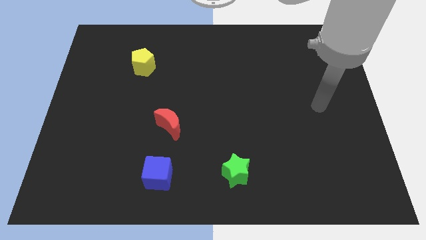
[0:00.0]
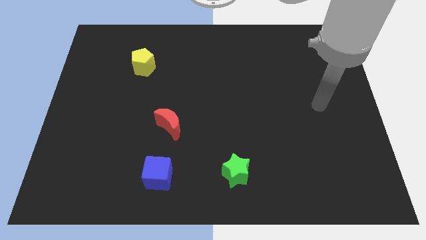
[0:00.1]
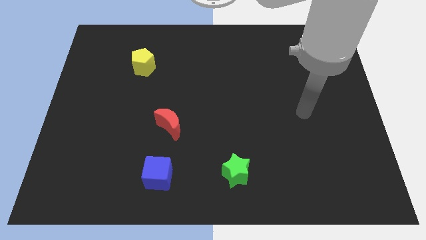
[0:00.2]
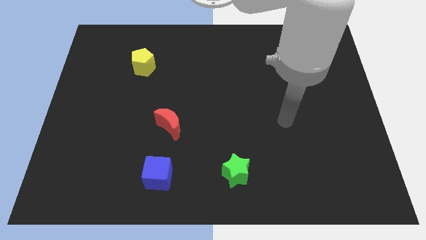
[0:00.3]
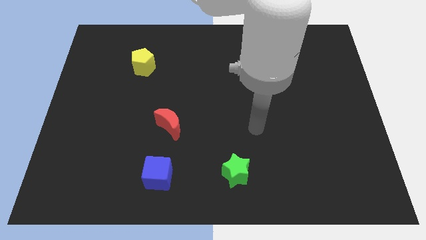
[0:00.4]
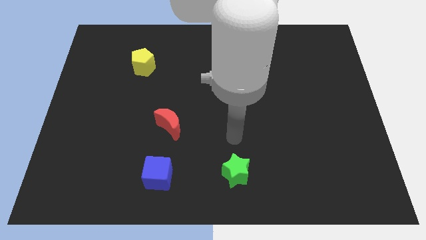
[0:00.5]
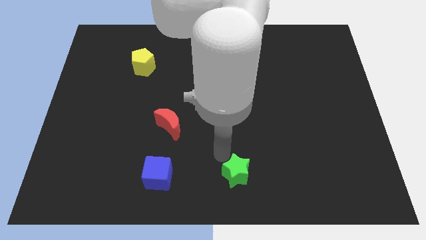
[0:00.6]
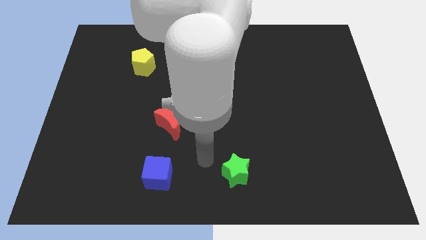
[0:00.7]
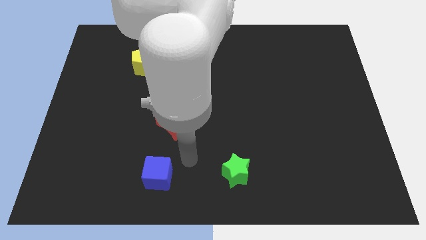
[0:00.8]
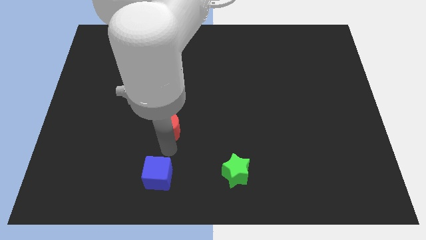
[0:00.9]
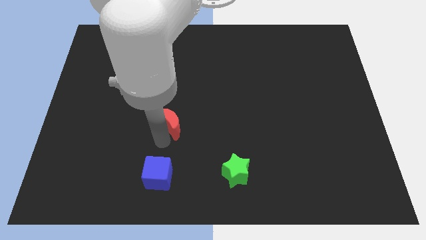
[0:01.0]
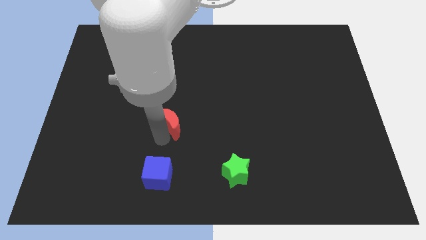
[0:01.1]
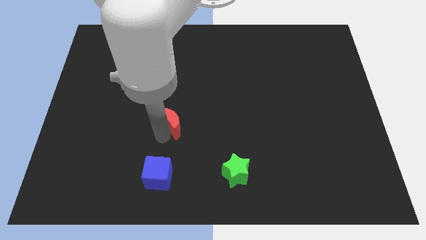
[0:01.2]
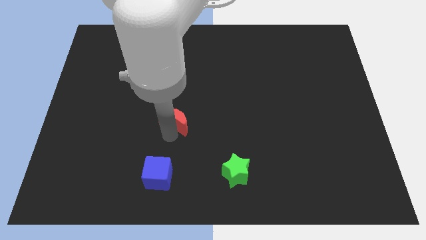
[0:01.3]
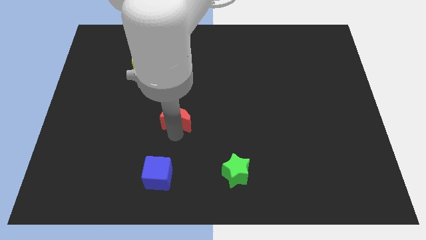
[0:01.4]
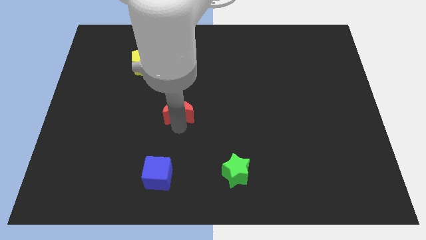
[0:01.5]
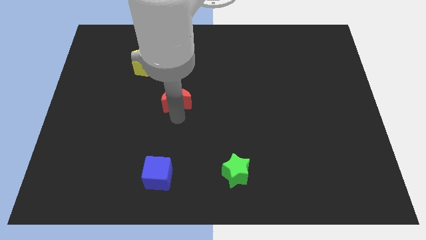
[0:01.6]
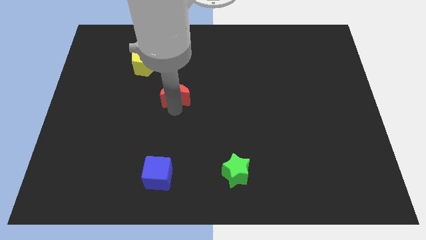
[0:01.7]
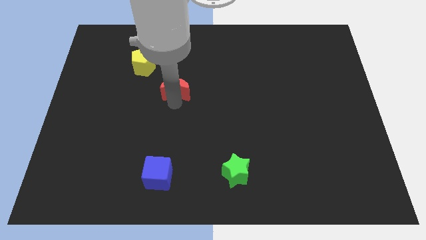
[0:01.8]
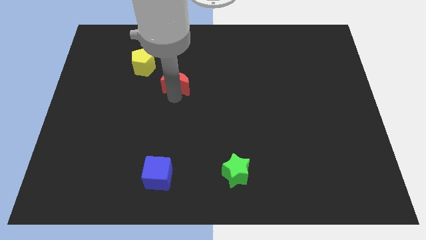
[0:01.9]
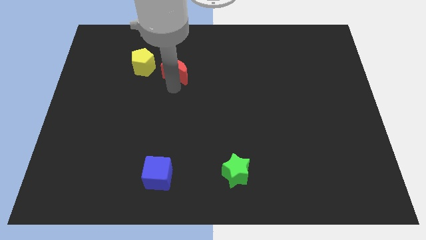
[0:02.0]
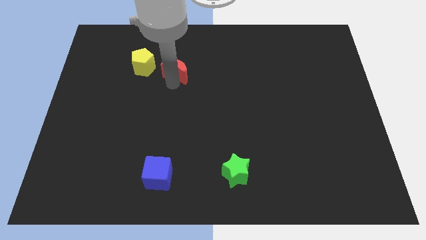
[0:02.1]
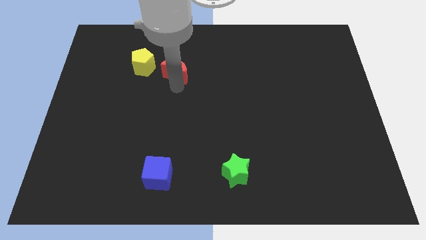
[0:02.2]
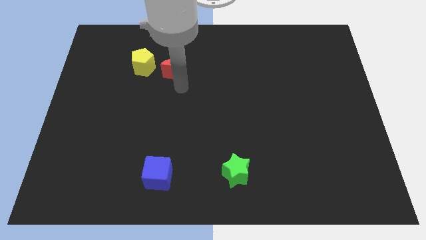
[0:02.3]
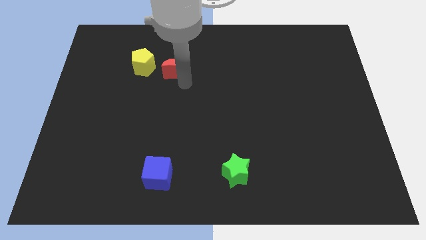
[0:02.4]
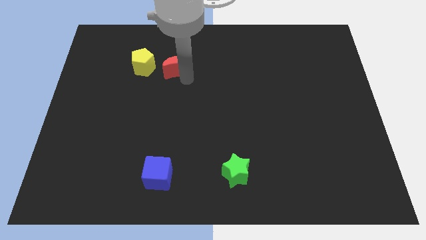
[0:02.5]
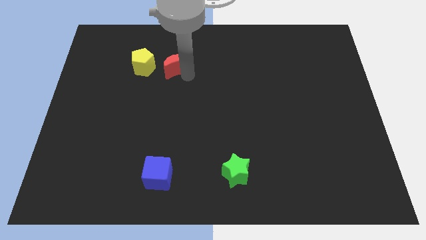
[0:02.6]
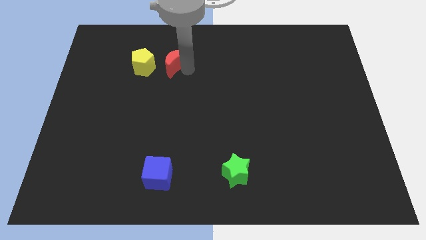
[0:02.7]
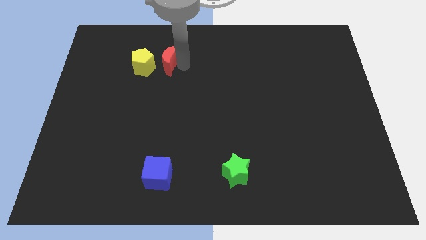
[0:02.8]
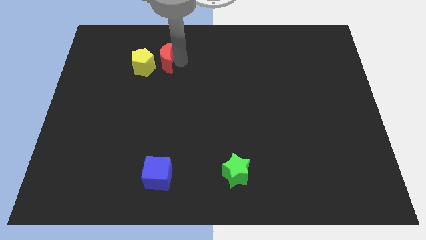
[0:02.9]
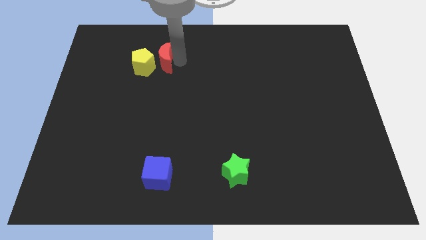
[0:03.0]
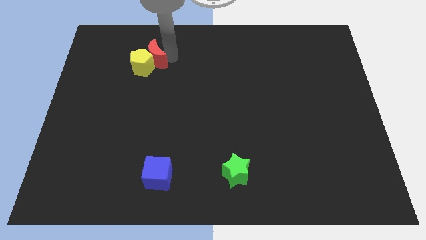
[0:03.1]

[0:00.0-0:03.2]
put the red block to the pentagon

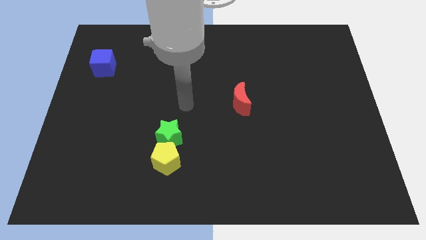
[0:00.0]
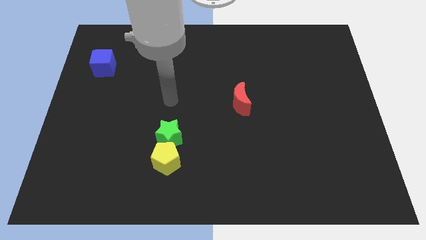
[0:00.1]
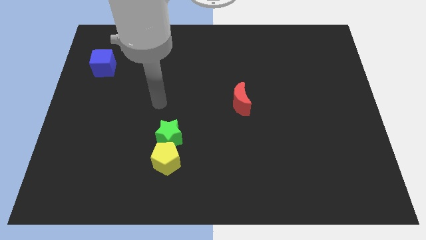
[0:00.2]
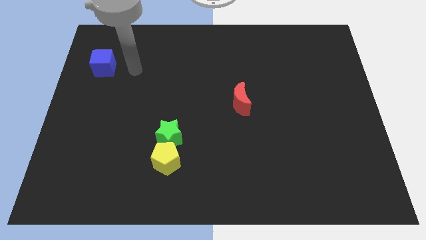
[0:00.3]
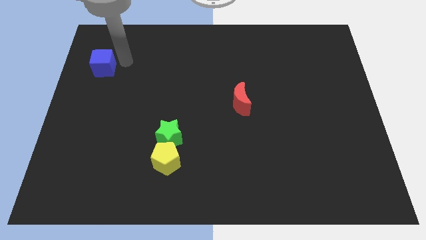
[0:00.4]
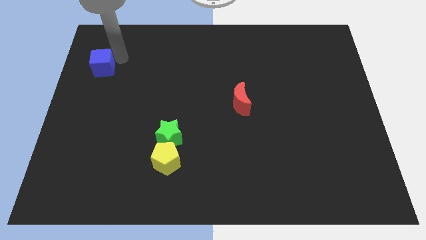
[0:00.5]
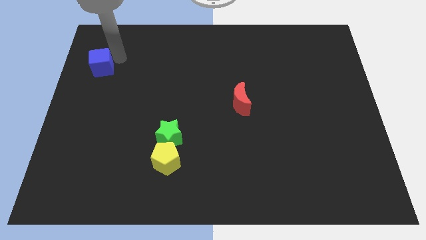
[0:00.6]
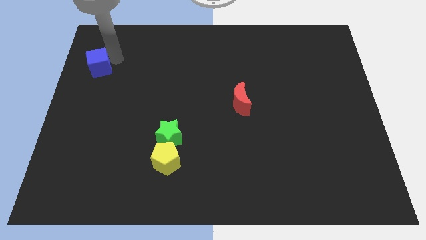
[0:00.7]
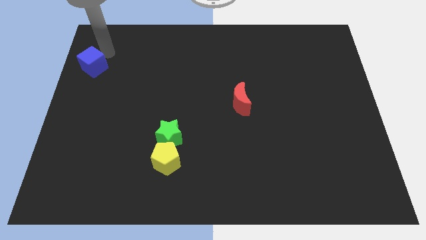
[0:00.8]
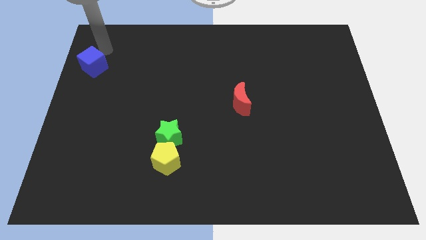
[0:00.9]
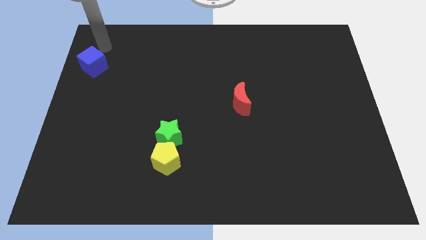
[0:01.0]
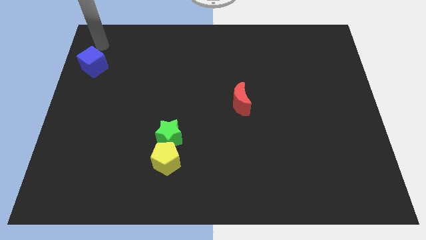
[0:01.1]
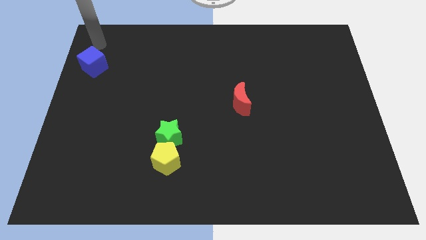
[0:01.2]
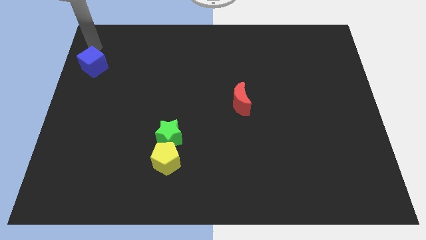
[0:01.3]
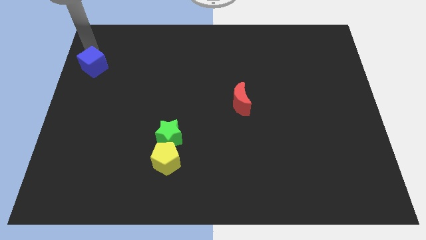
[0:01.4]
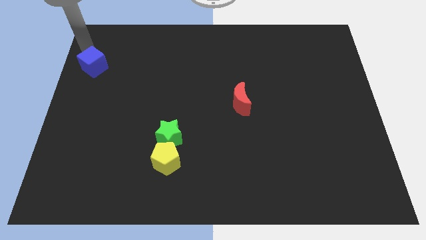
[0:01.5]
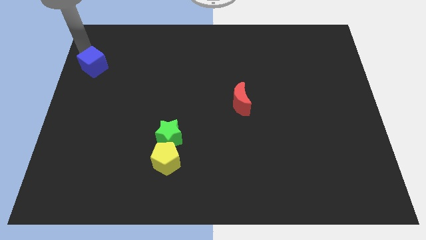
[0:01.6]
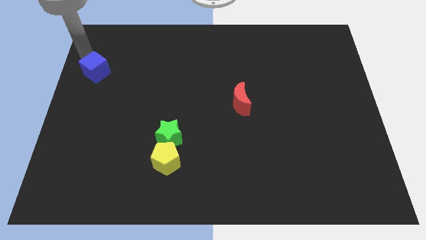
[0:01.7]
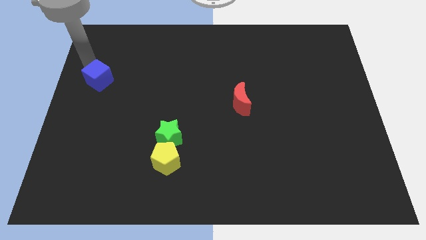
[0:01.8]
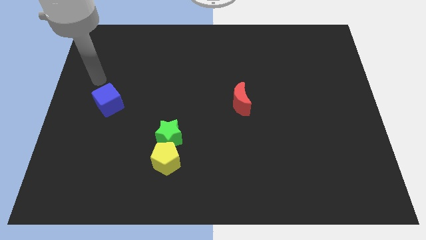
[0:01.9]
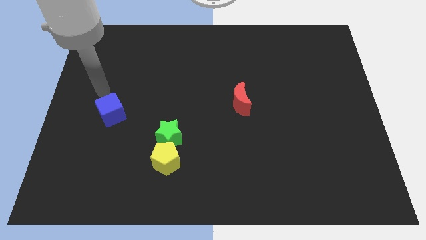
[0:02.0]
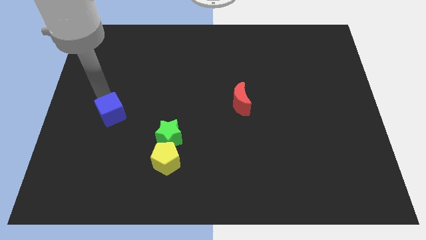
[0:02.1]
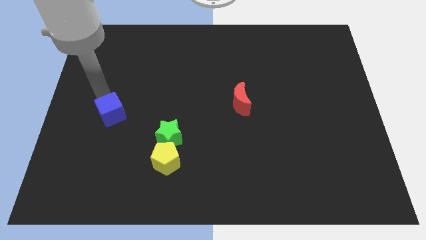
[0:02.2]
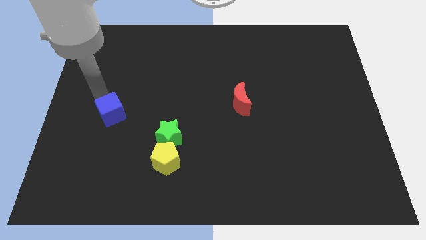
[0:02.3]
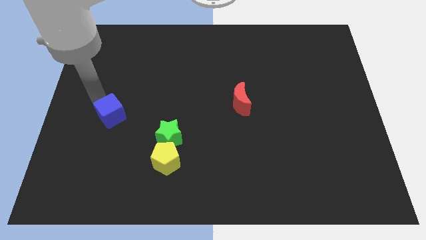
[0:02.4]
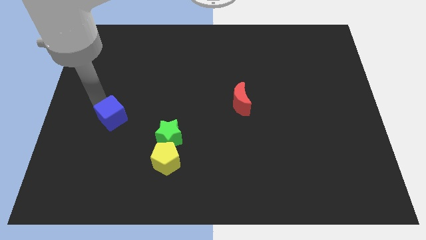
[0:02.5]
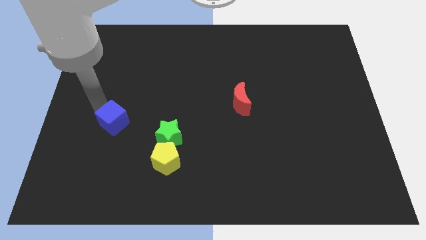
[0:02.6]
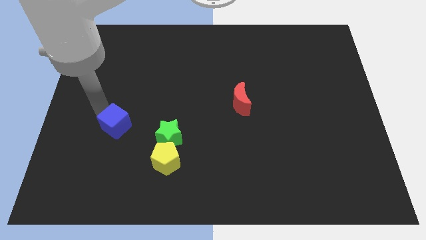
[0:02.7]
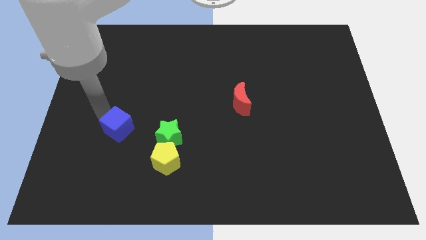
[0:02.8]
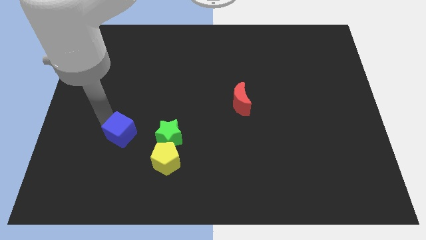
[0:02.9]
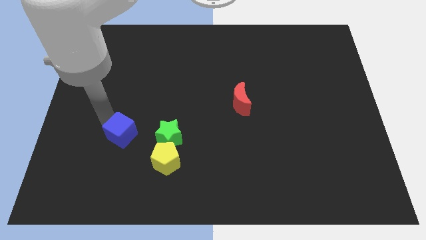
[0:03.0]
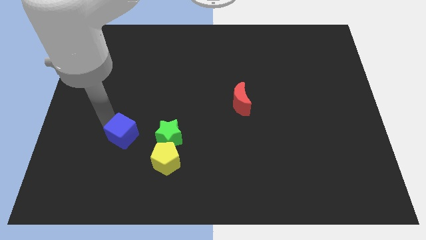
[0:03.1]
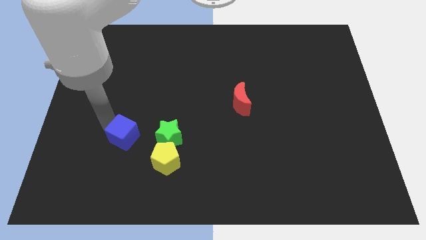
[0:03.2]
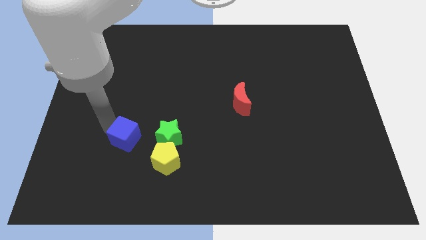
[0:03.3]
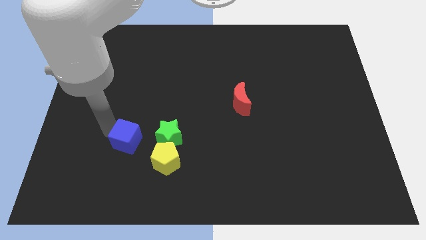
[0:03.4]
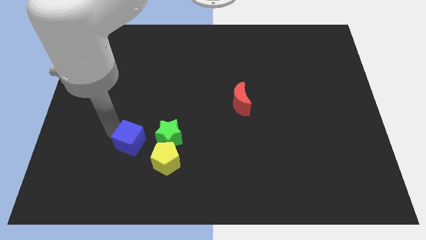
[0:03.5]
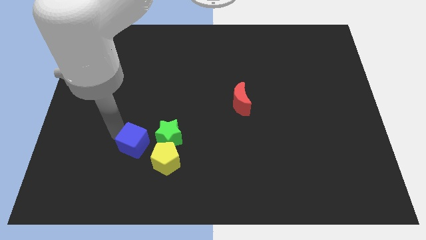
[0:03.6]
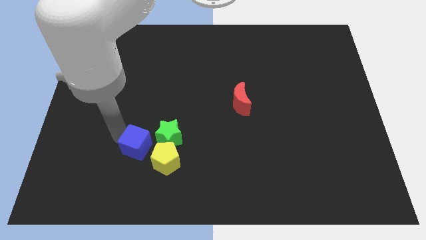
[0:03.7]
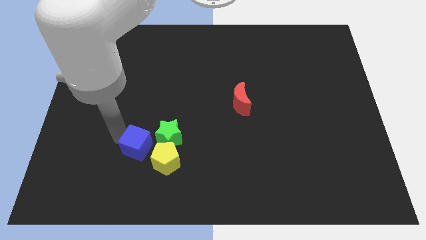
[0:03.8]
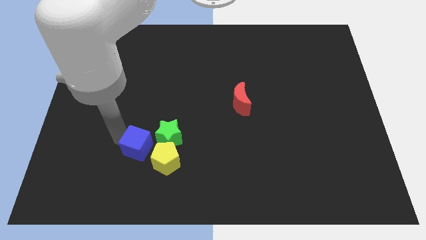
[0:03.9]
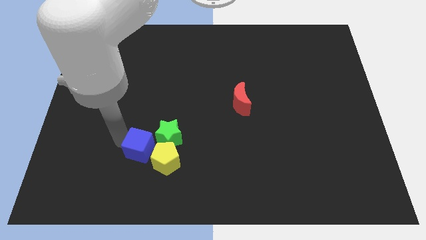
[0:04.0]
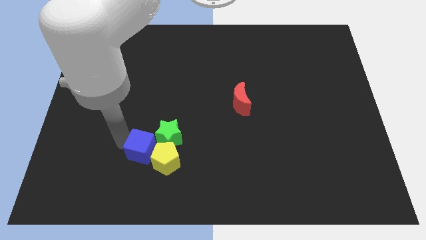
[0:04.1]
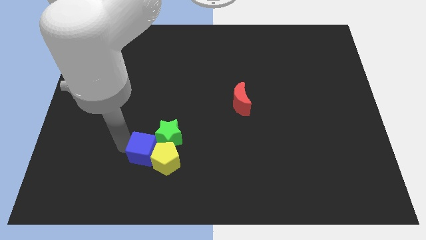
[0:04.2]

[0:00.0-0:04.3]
move the blue cube towards the pentagon

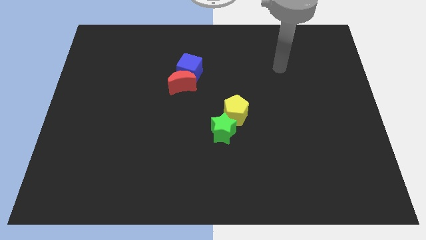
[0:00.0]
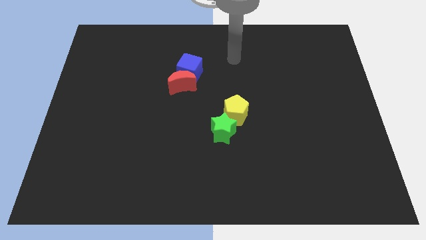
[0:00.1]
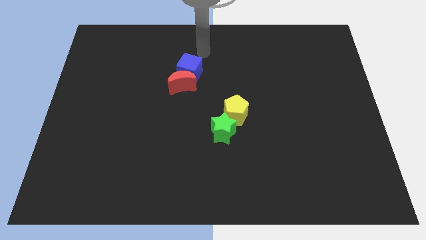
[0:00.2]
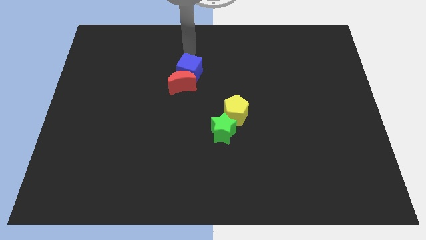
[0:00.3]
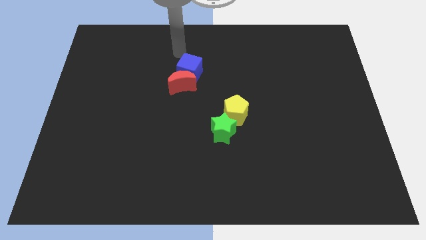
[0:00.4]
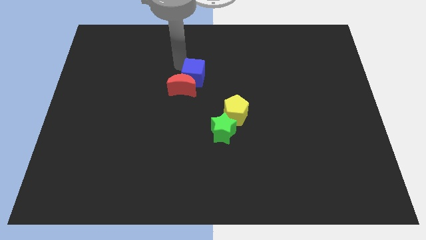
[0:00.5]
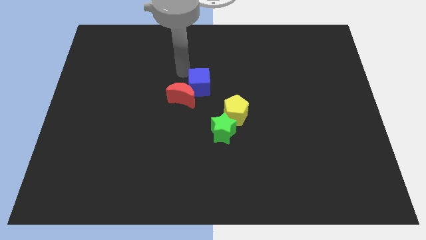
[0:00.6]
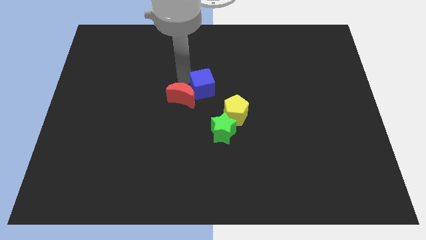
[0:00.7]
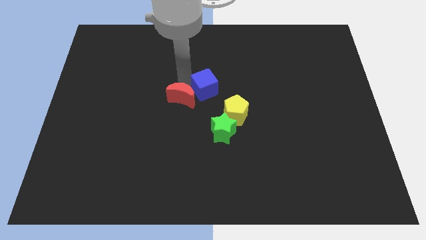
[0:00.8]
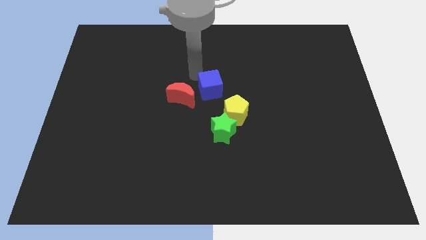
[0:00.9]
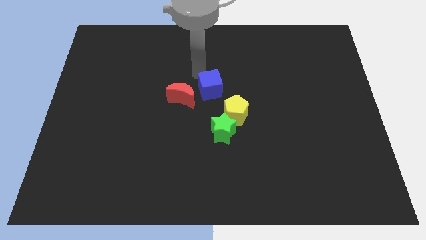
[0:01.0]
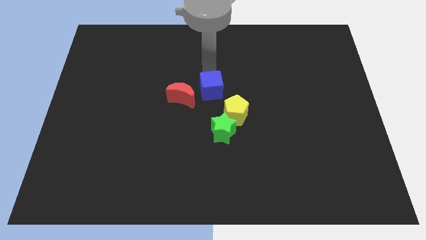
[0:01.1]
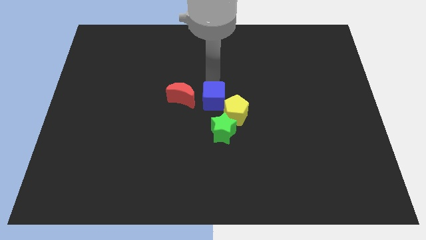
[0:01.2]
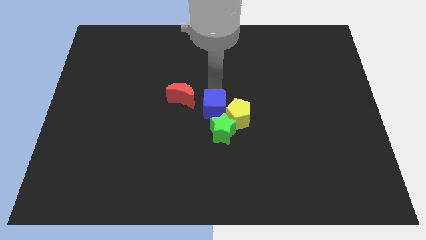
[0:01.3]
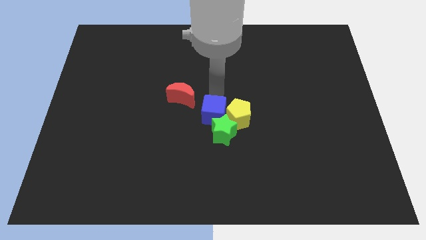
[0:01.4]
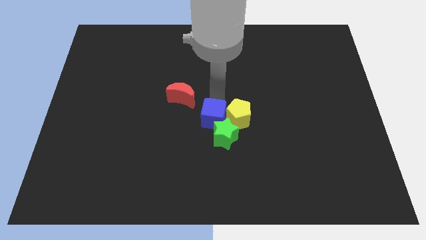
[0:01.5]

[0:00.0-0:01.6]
put the blue cube close to the yellow pentagon
